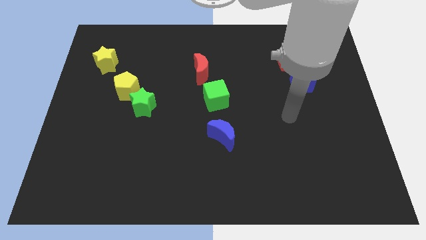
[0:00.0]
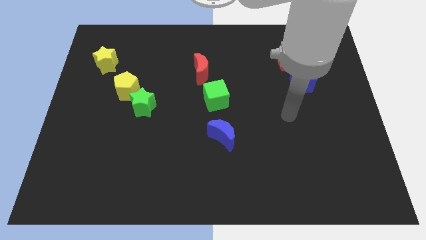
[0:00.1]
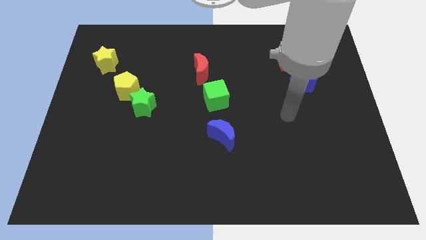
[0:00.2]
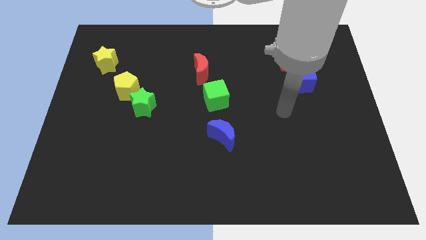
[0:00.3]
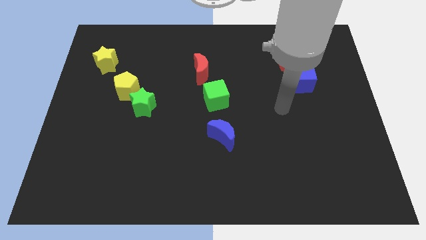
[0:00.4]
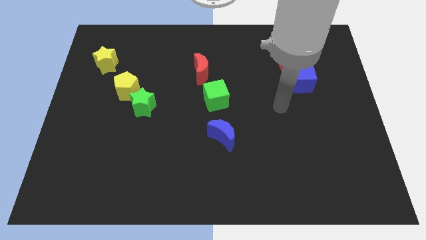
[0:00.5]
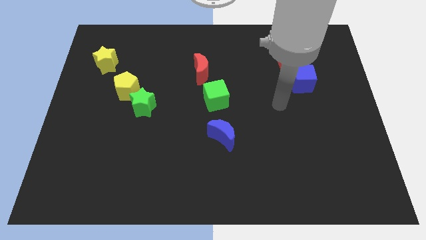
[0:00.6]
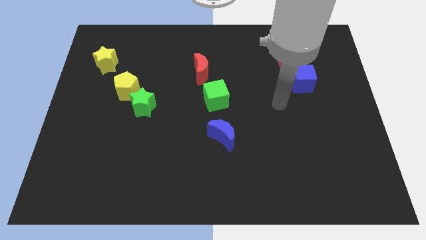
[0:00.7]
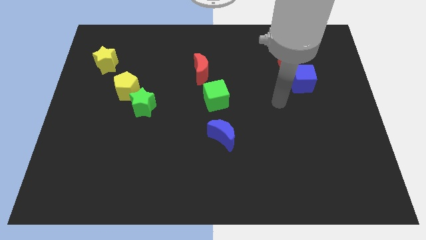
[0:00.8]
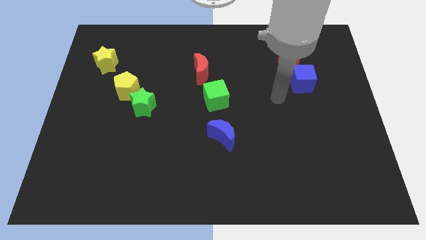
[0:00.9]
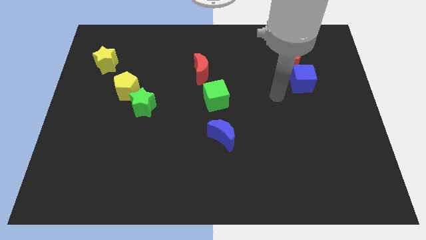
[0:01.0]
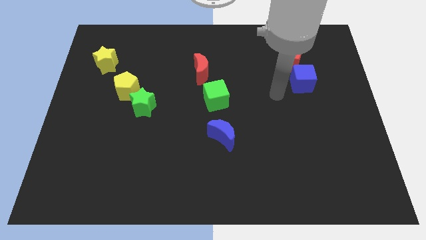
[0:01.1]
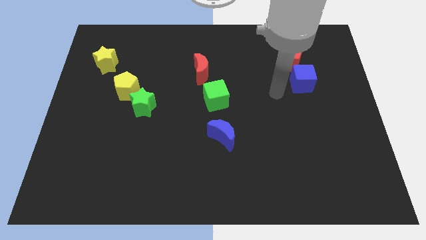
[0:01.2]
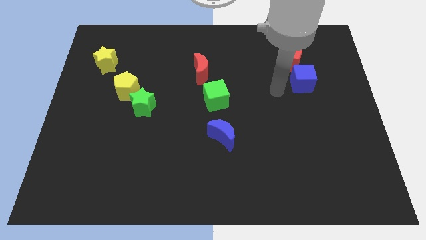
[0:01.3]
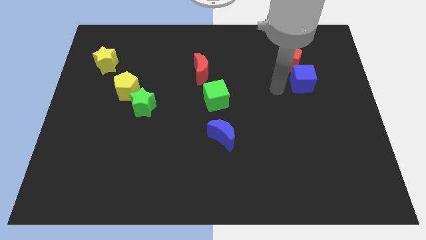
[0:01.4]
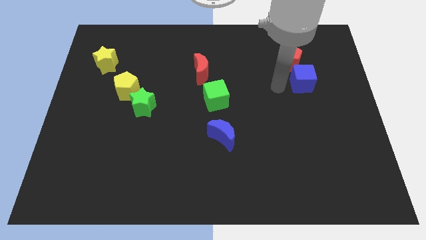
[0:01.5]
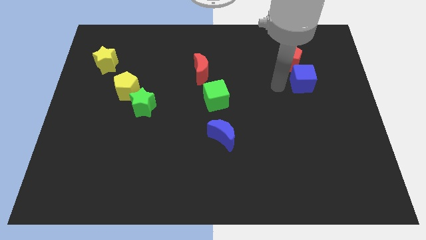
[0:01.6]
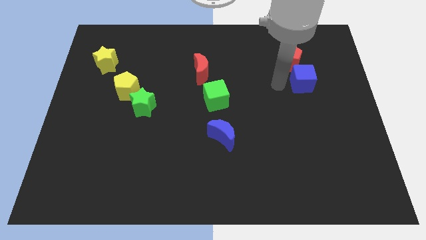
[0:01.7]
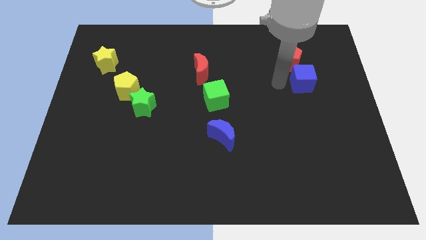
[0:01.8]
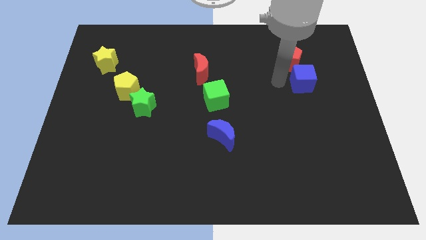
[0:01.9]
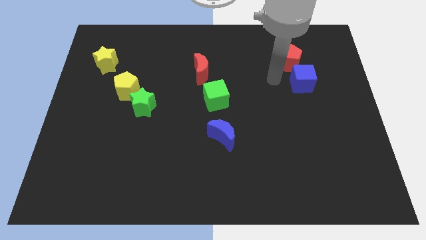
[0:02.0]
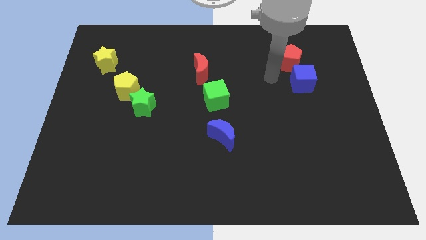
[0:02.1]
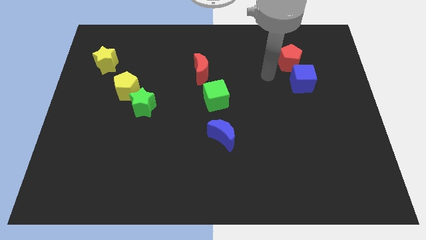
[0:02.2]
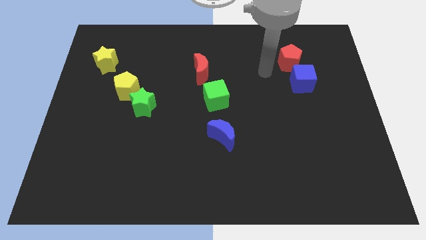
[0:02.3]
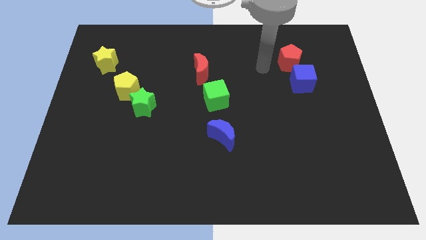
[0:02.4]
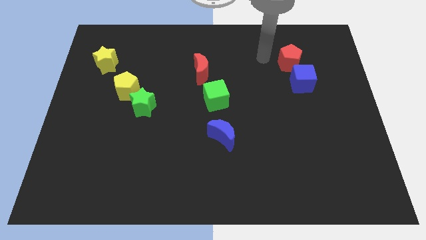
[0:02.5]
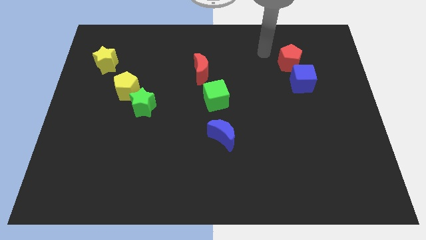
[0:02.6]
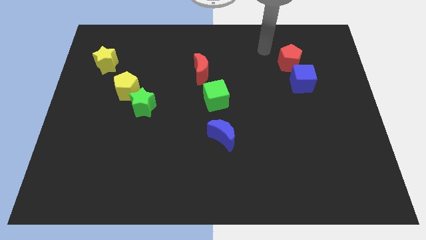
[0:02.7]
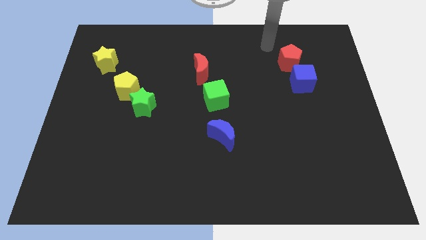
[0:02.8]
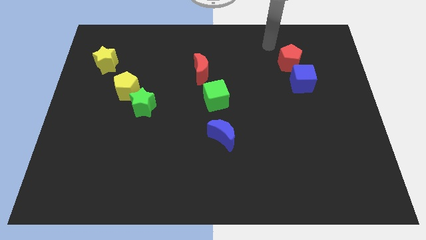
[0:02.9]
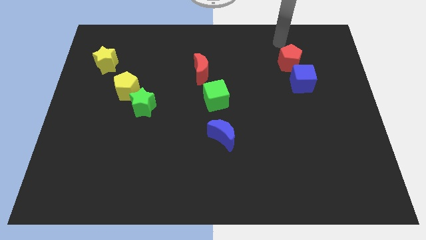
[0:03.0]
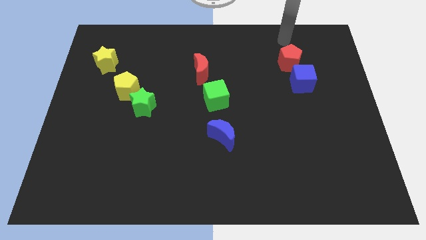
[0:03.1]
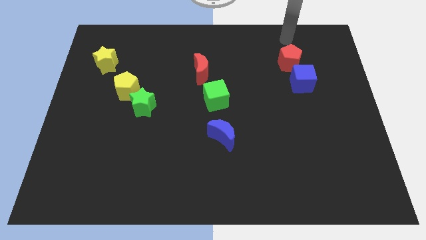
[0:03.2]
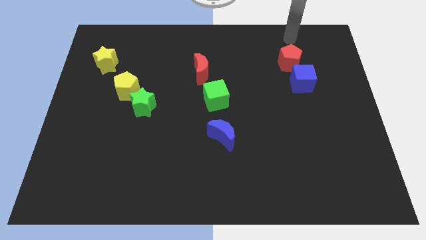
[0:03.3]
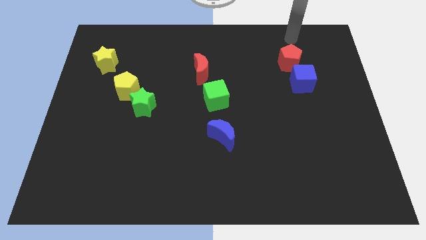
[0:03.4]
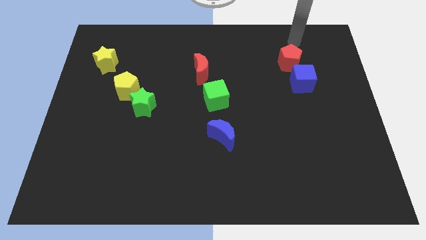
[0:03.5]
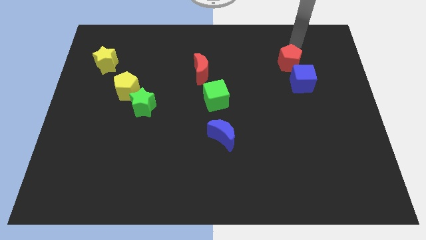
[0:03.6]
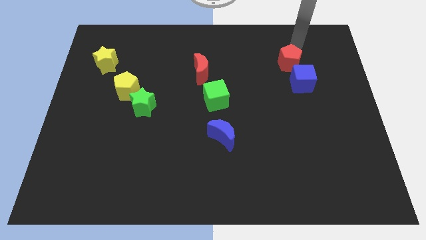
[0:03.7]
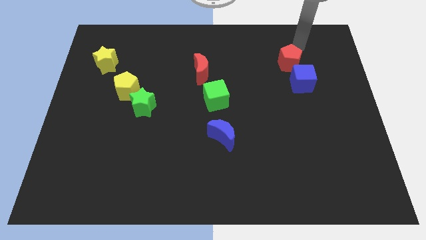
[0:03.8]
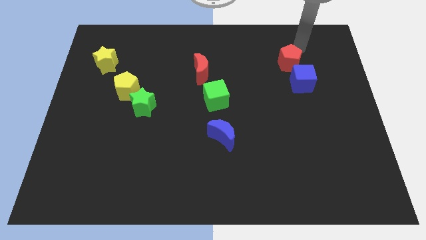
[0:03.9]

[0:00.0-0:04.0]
move the arm to the top of the red pentagon

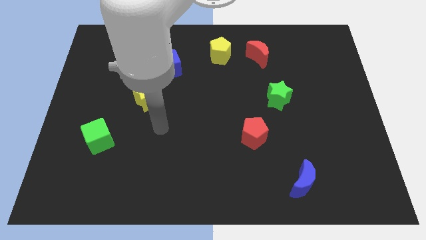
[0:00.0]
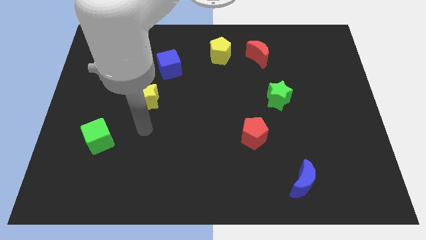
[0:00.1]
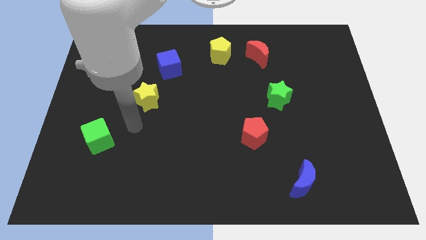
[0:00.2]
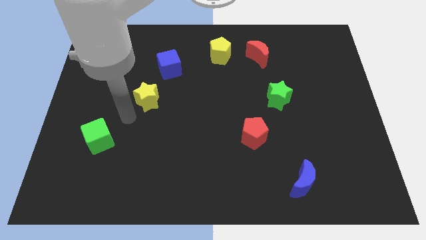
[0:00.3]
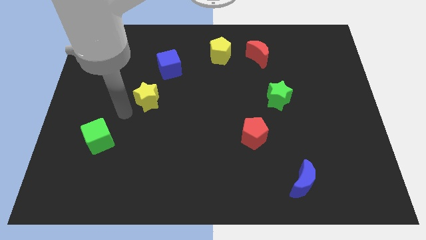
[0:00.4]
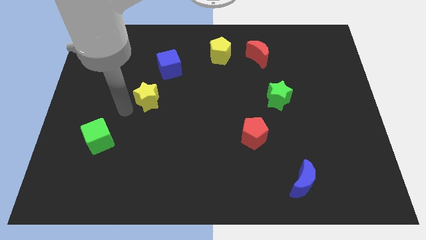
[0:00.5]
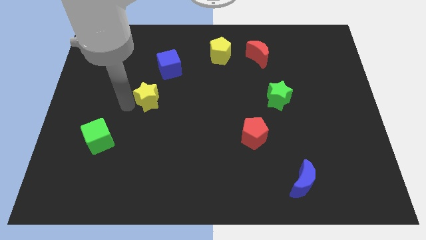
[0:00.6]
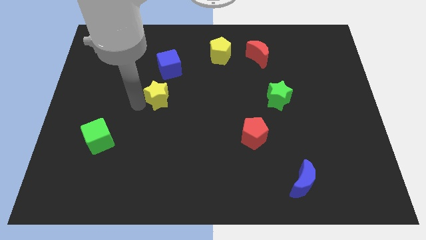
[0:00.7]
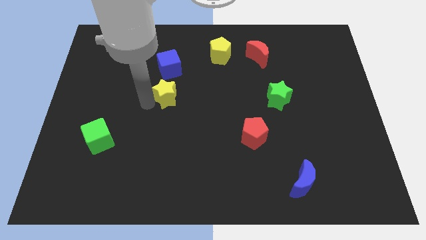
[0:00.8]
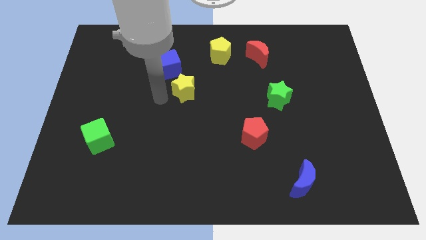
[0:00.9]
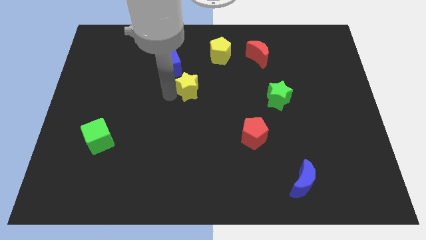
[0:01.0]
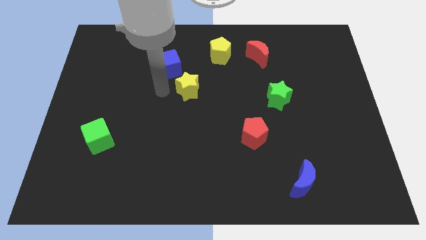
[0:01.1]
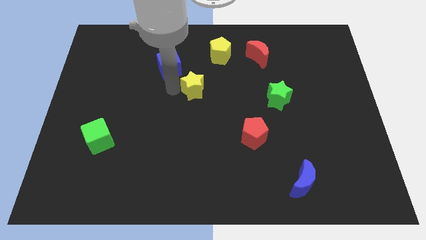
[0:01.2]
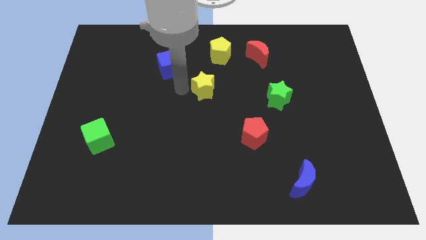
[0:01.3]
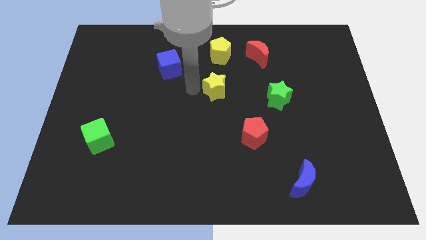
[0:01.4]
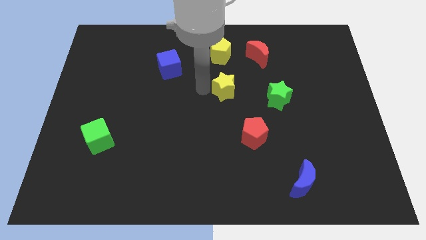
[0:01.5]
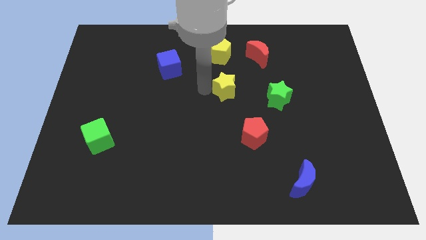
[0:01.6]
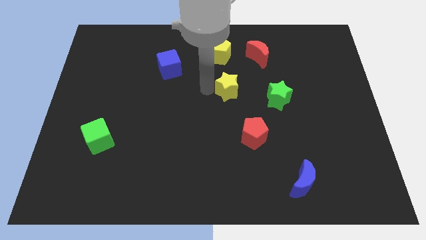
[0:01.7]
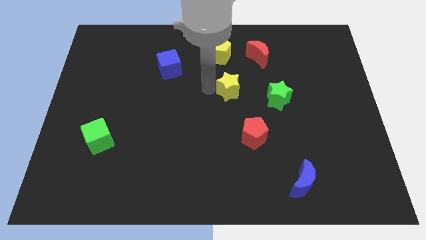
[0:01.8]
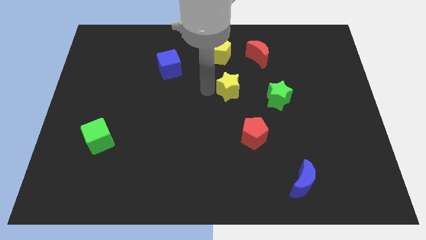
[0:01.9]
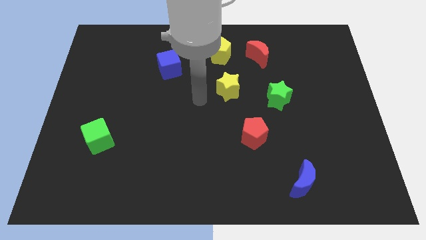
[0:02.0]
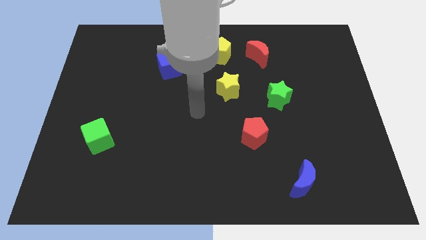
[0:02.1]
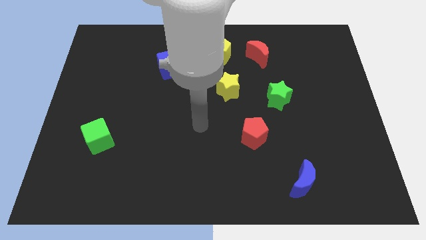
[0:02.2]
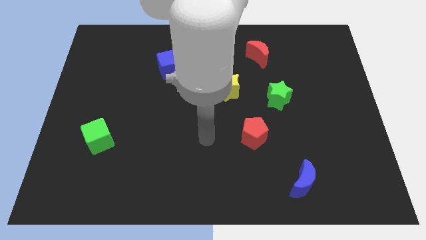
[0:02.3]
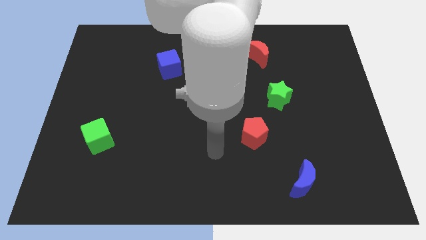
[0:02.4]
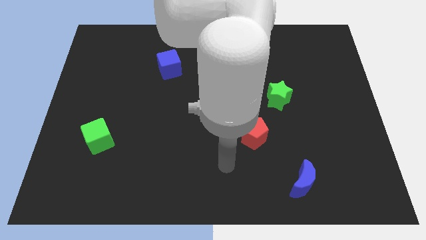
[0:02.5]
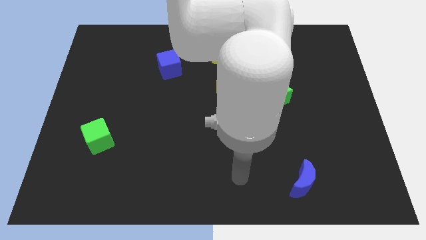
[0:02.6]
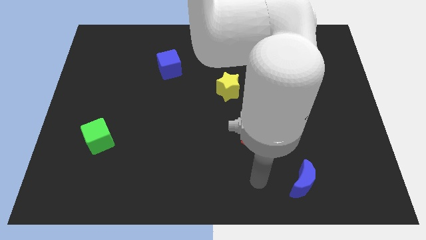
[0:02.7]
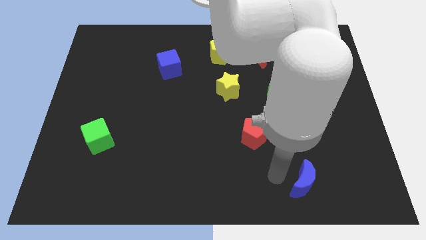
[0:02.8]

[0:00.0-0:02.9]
move the yellow star below the yellow pentagon

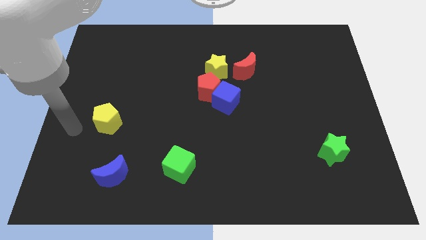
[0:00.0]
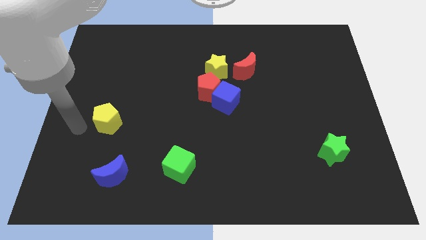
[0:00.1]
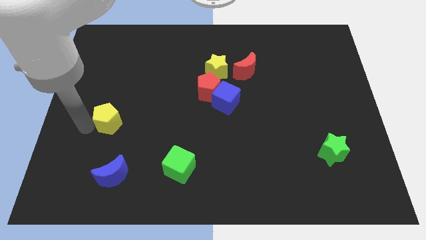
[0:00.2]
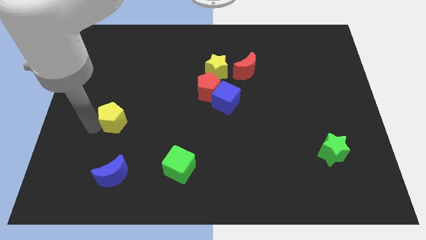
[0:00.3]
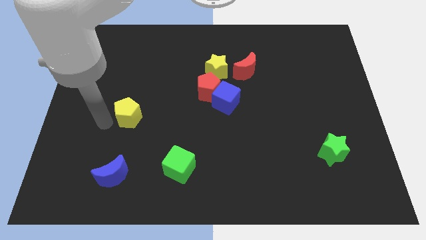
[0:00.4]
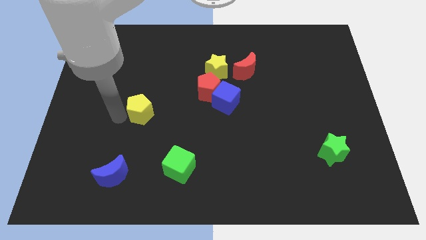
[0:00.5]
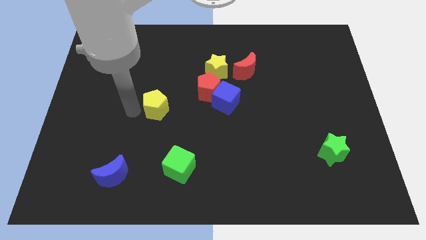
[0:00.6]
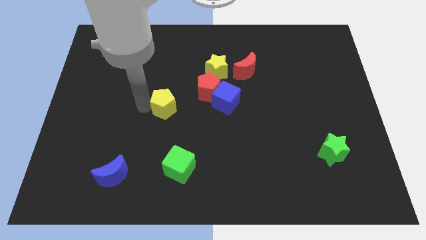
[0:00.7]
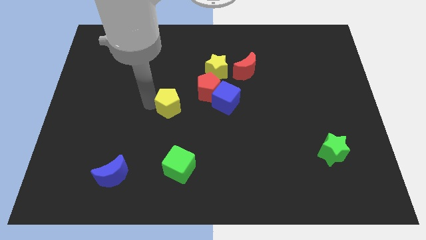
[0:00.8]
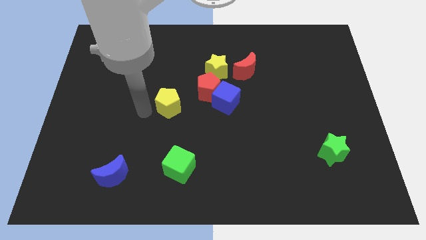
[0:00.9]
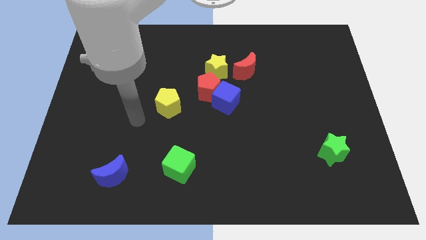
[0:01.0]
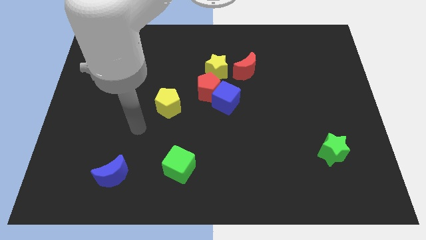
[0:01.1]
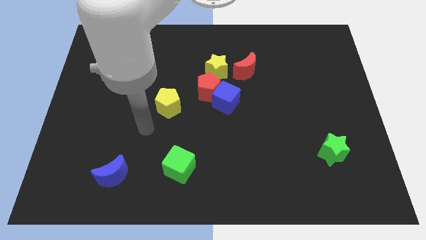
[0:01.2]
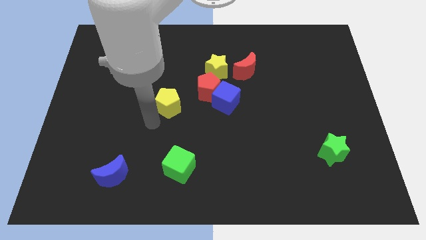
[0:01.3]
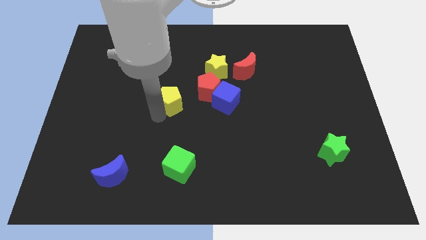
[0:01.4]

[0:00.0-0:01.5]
move the yellow pentagon above the green cube

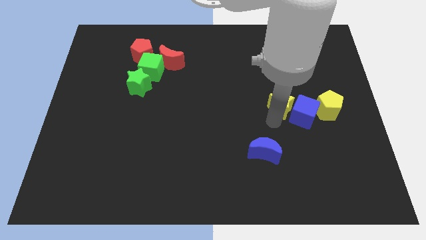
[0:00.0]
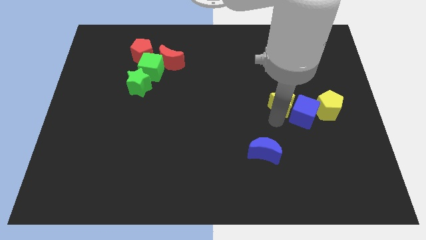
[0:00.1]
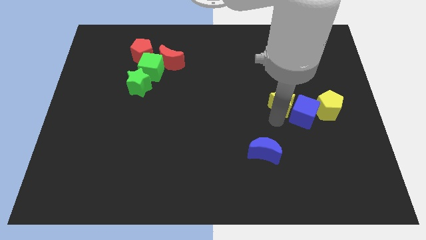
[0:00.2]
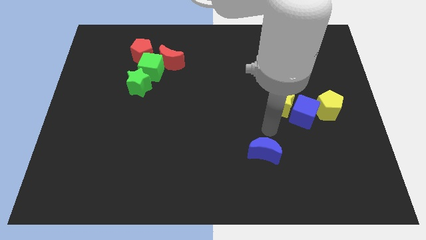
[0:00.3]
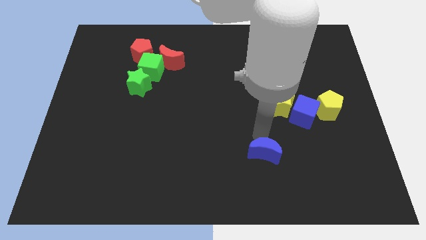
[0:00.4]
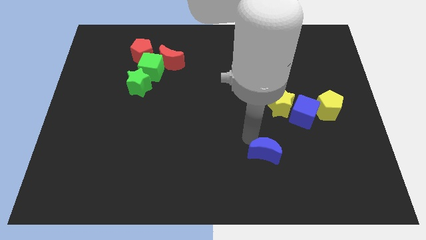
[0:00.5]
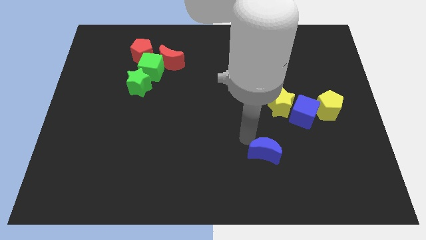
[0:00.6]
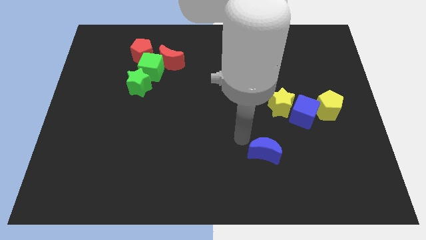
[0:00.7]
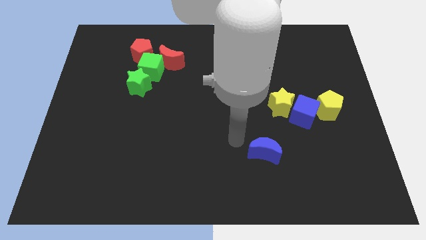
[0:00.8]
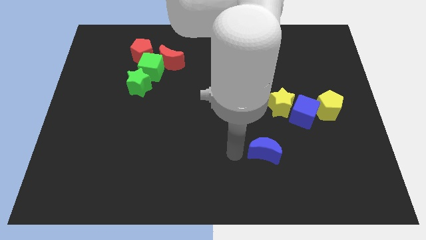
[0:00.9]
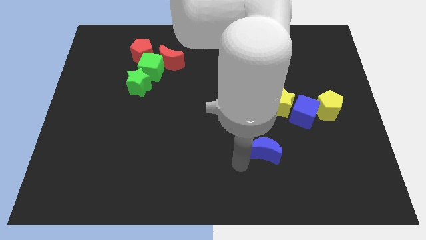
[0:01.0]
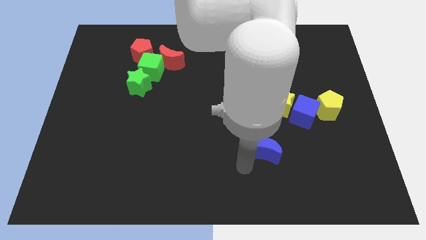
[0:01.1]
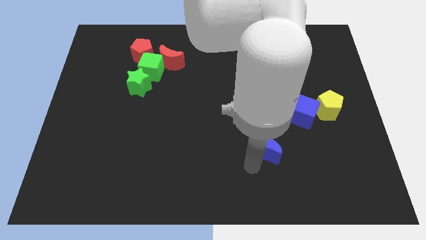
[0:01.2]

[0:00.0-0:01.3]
move the arm towards blue crescent
